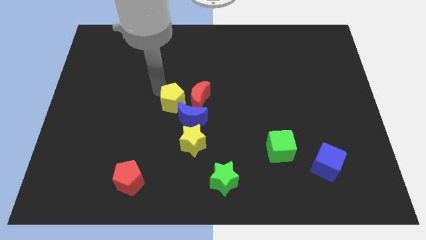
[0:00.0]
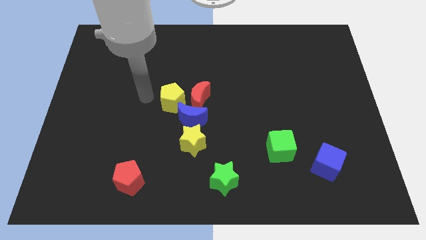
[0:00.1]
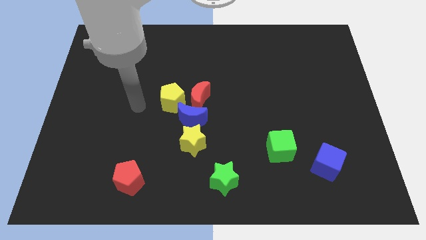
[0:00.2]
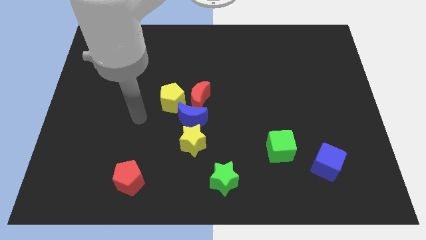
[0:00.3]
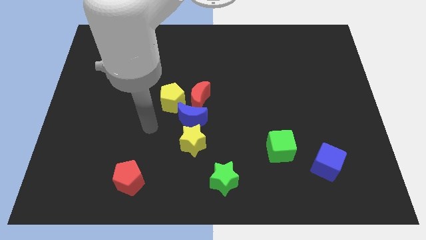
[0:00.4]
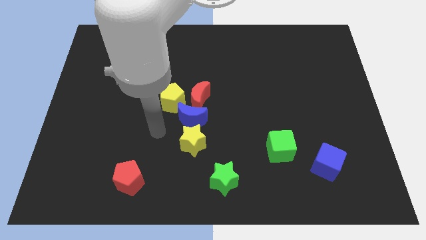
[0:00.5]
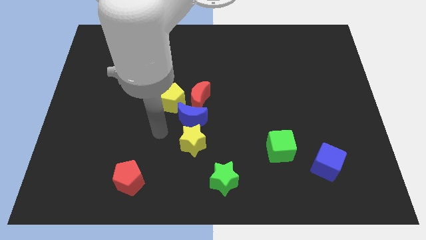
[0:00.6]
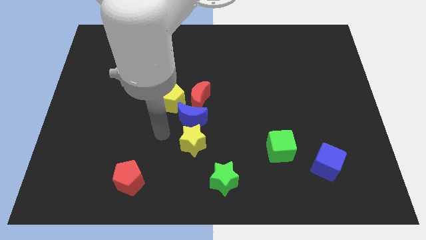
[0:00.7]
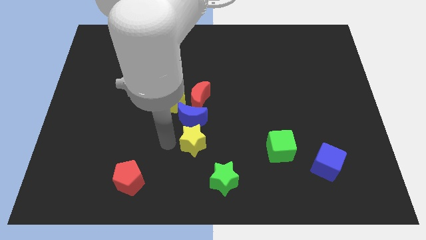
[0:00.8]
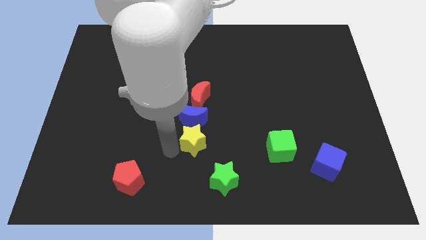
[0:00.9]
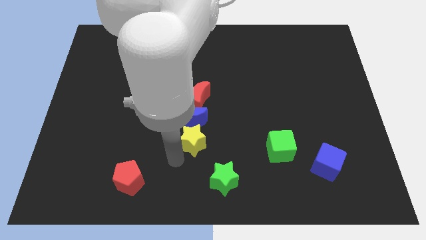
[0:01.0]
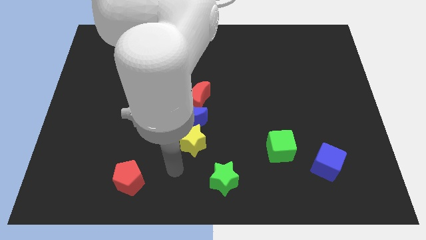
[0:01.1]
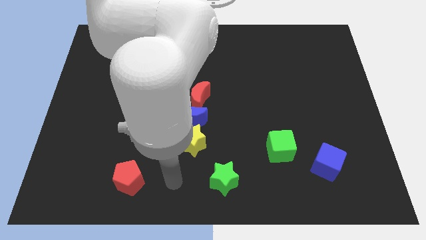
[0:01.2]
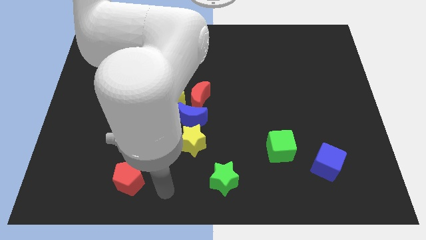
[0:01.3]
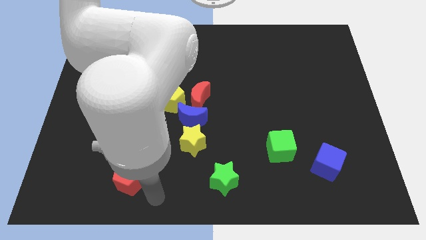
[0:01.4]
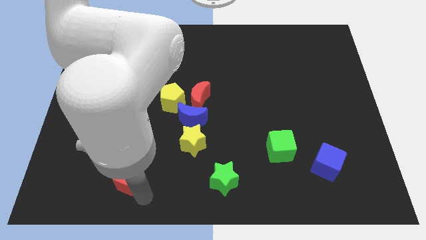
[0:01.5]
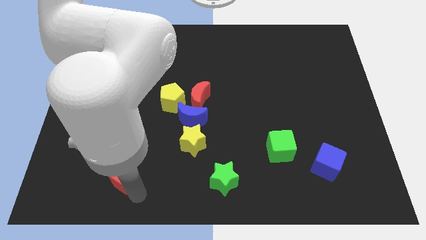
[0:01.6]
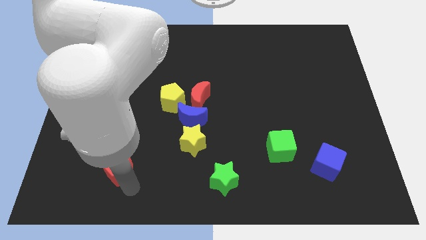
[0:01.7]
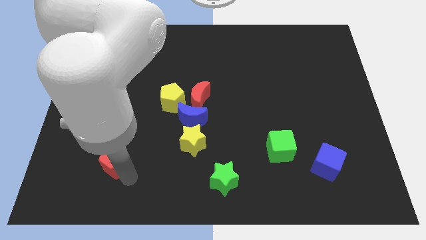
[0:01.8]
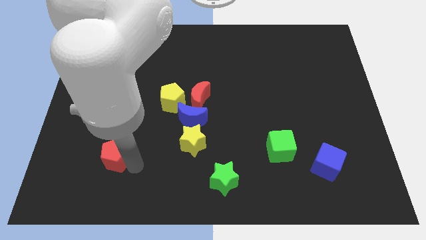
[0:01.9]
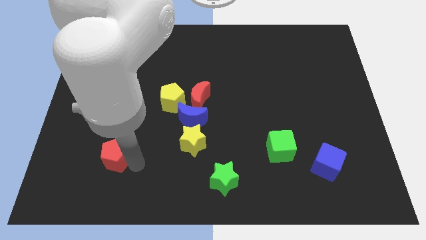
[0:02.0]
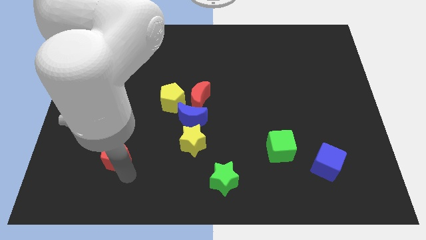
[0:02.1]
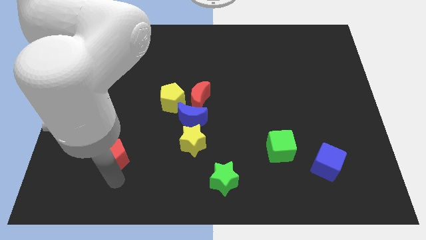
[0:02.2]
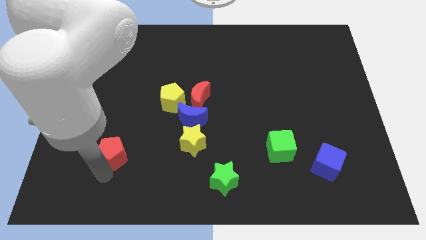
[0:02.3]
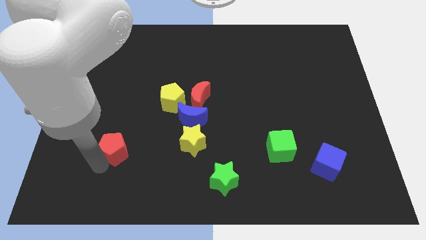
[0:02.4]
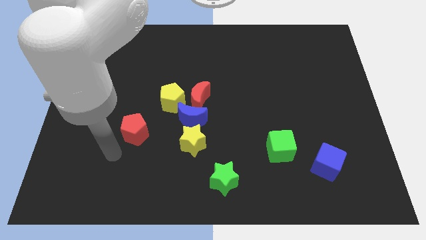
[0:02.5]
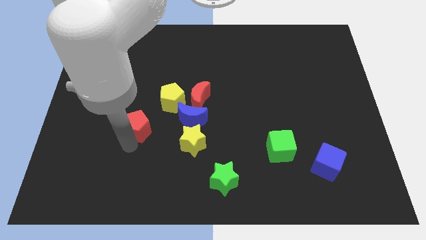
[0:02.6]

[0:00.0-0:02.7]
push red pentagon diagonally upwards

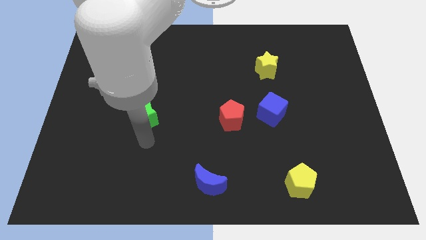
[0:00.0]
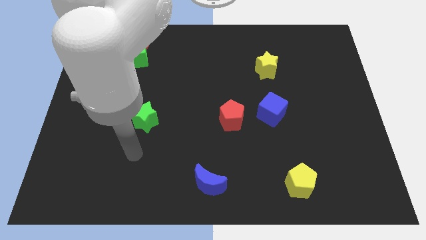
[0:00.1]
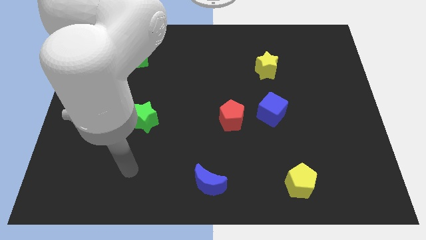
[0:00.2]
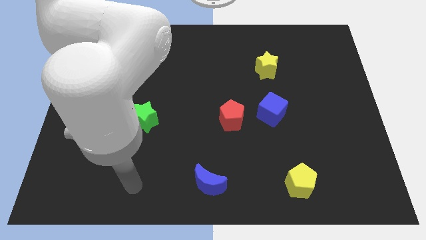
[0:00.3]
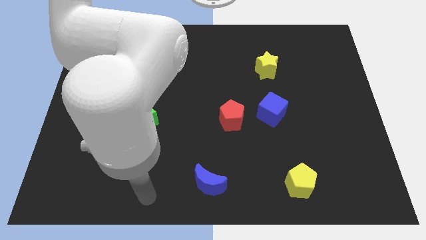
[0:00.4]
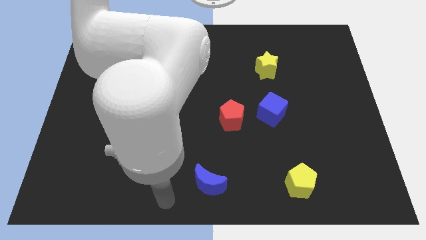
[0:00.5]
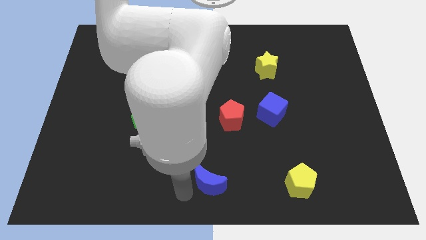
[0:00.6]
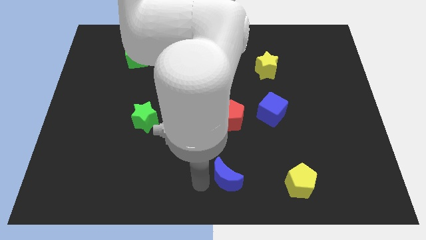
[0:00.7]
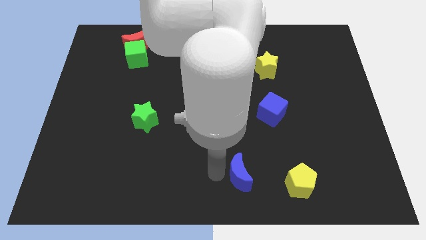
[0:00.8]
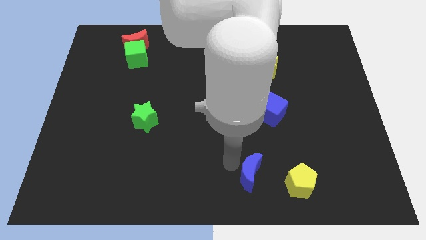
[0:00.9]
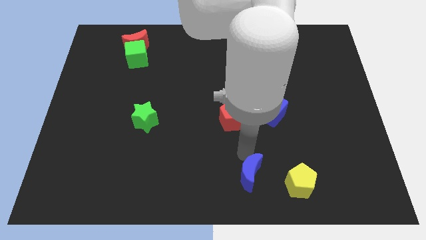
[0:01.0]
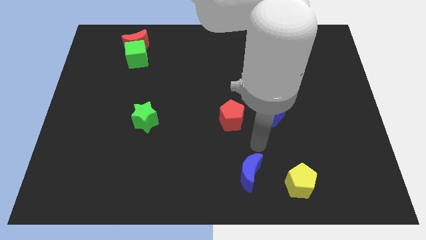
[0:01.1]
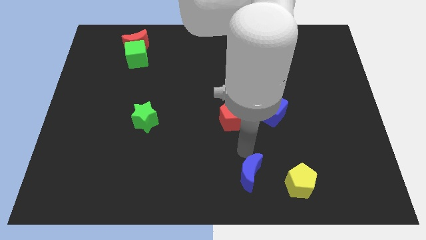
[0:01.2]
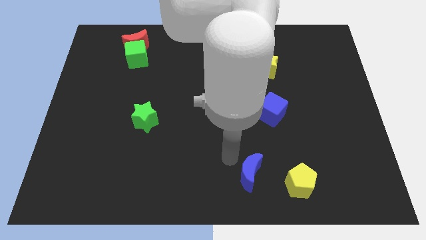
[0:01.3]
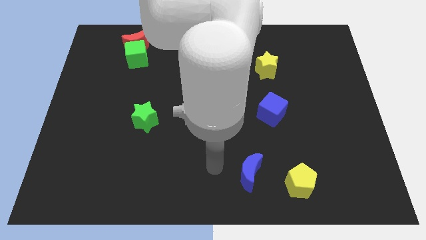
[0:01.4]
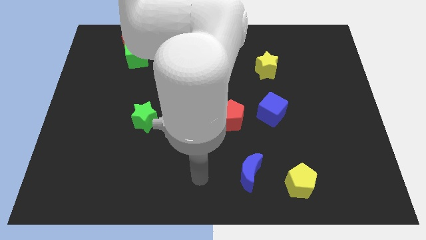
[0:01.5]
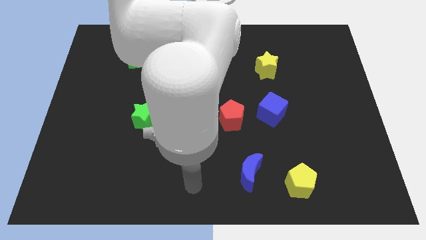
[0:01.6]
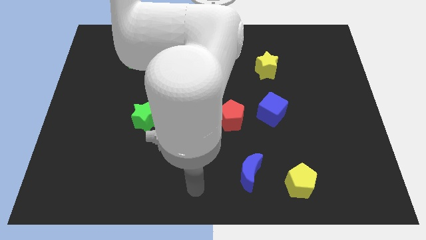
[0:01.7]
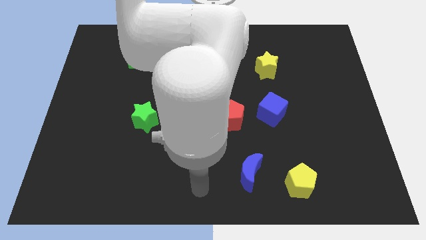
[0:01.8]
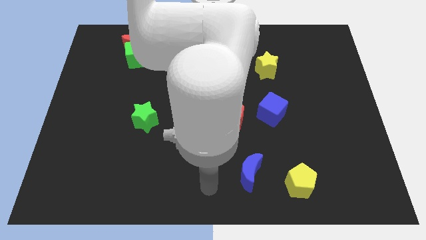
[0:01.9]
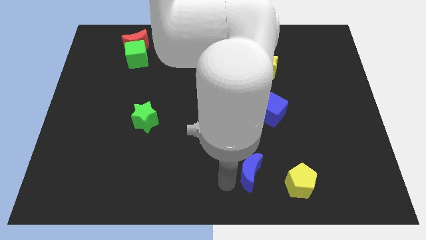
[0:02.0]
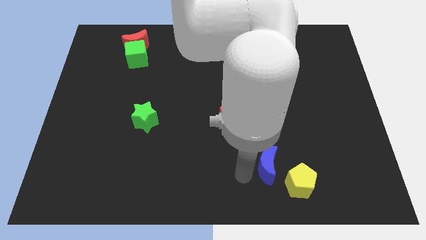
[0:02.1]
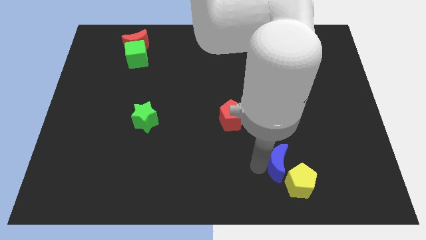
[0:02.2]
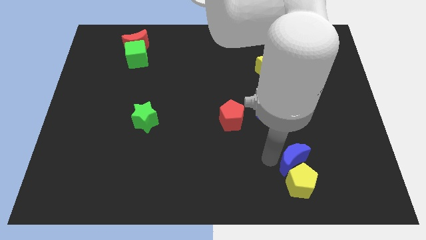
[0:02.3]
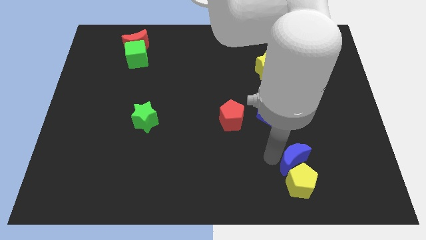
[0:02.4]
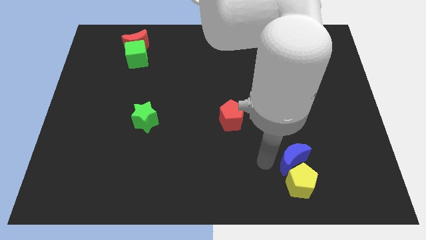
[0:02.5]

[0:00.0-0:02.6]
push the blue crescent close to the yellow pentagon

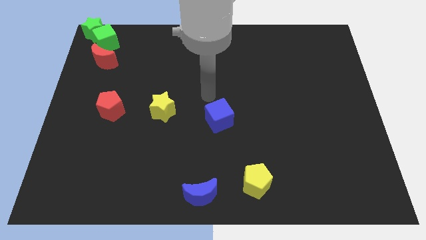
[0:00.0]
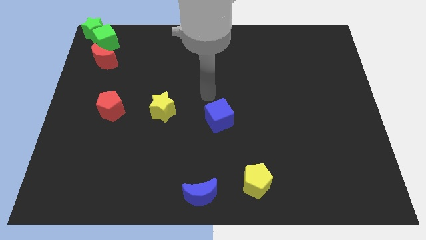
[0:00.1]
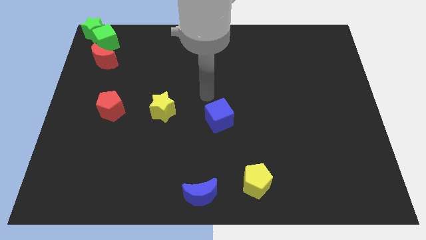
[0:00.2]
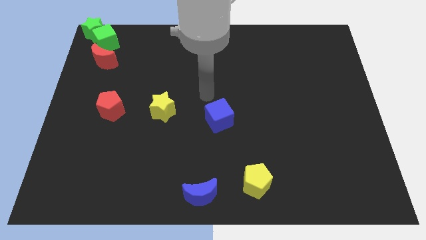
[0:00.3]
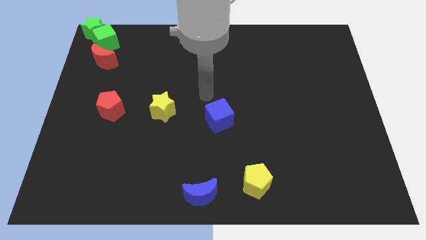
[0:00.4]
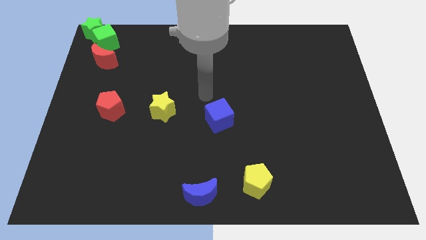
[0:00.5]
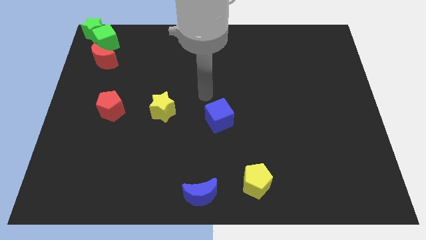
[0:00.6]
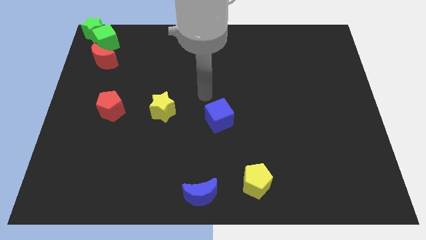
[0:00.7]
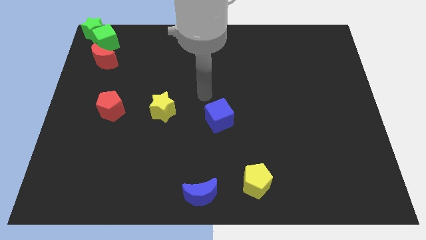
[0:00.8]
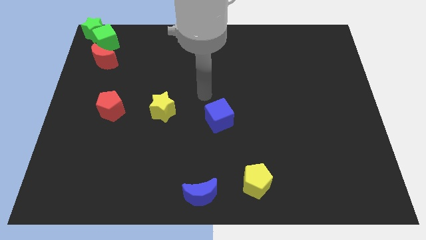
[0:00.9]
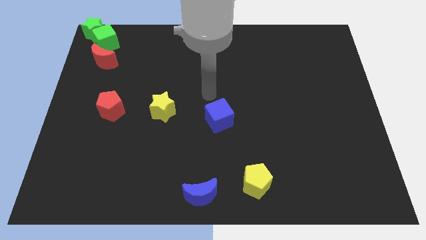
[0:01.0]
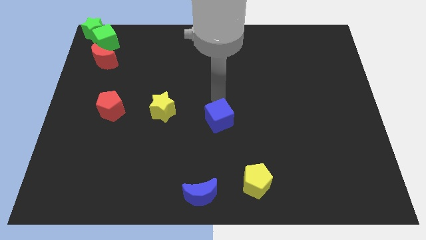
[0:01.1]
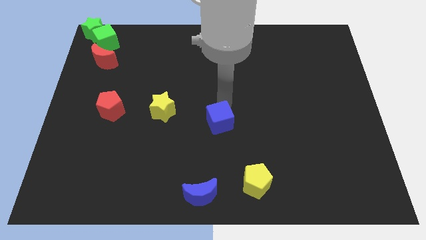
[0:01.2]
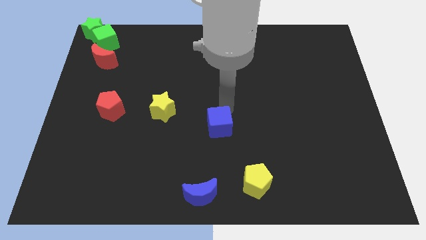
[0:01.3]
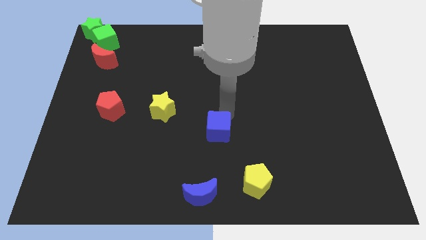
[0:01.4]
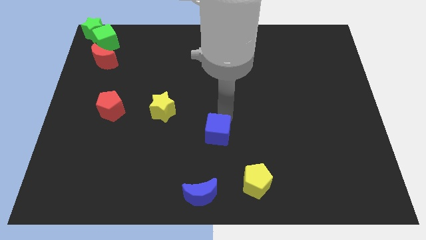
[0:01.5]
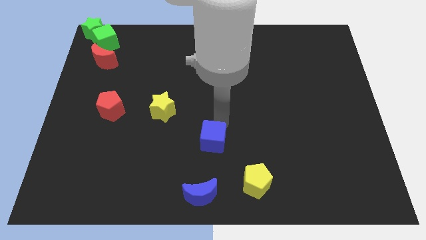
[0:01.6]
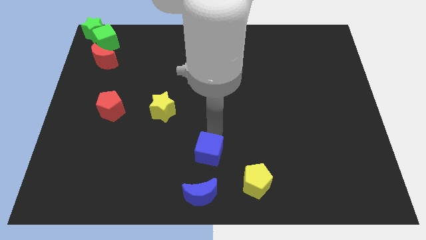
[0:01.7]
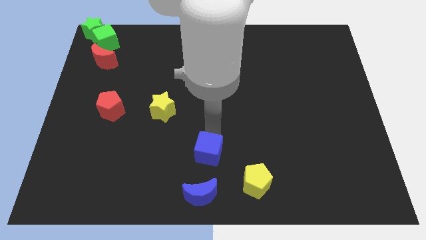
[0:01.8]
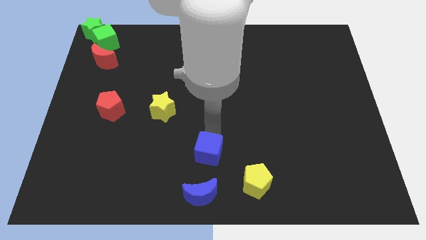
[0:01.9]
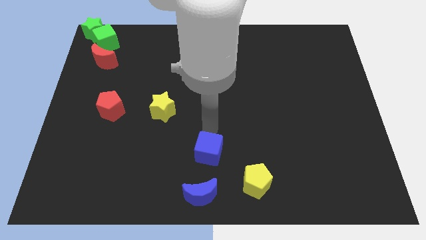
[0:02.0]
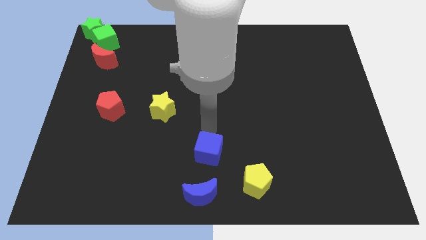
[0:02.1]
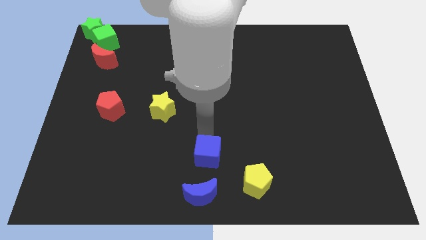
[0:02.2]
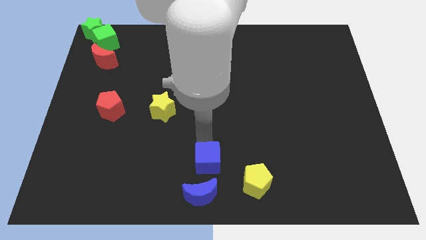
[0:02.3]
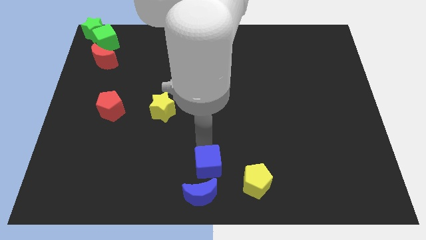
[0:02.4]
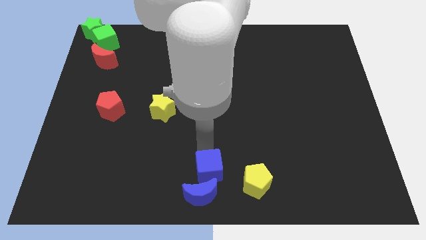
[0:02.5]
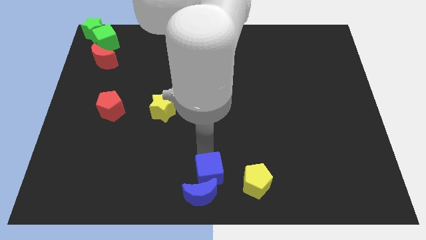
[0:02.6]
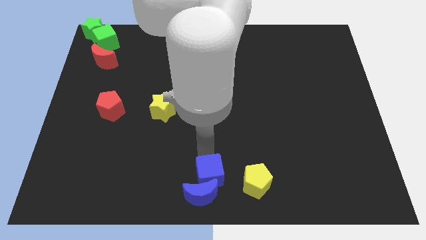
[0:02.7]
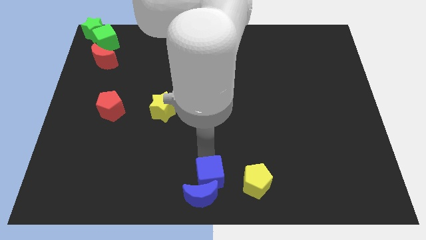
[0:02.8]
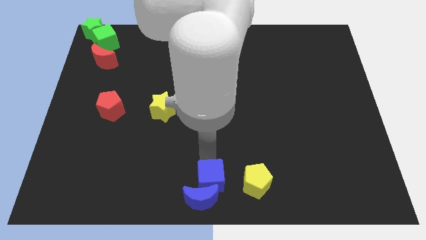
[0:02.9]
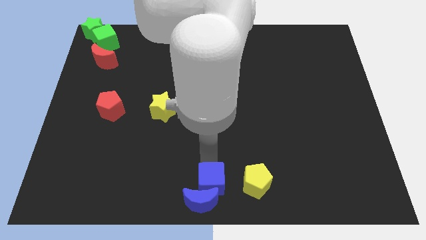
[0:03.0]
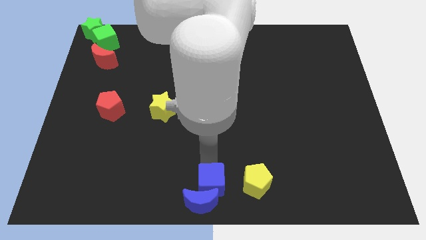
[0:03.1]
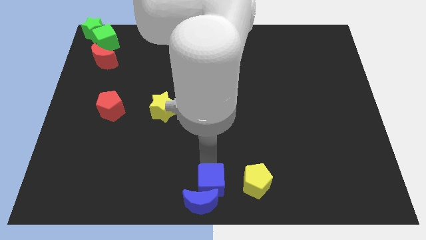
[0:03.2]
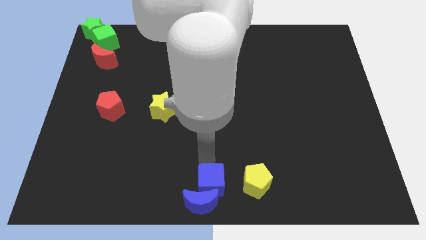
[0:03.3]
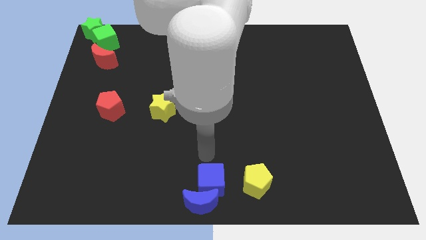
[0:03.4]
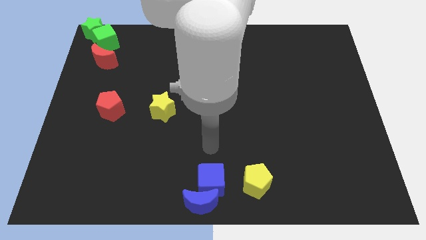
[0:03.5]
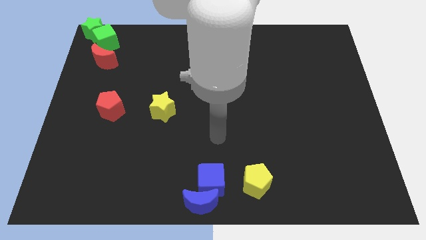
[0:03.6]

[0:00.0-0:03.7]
push the blue cube into the blue moon
